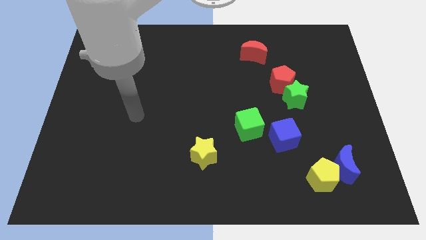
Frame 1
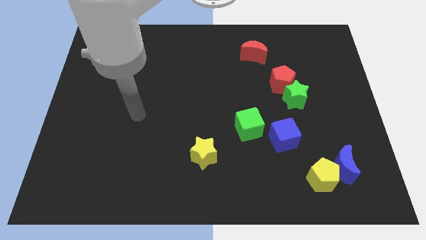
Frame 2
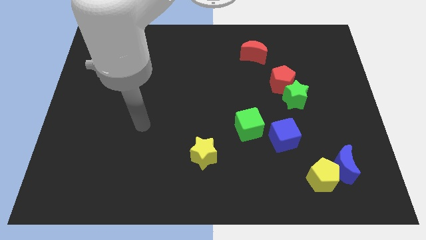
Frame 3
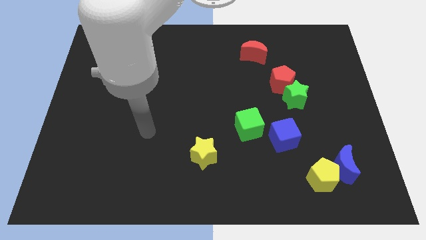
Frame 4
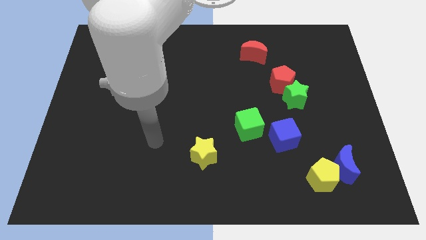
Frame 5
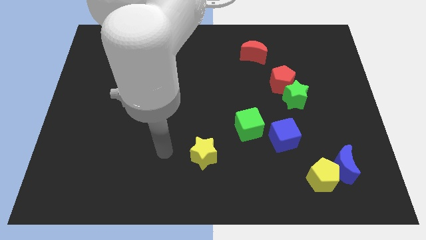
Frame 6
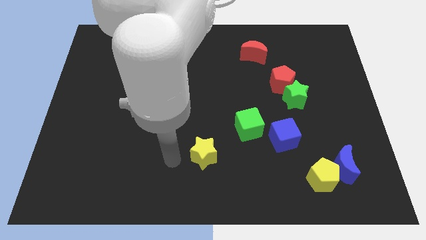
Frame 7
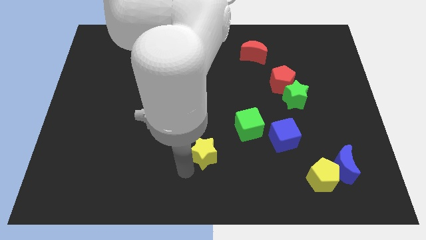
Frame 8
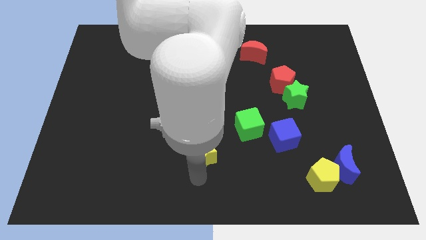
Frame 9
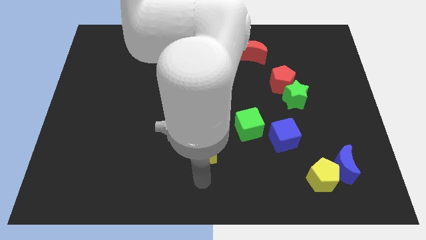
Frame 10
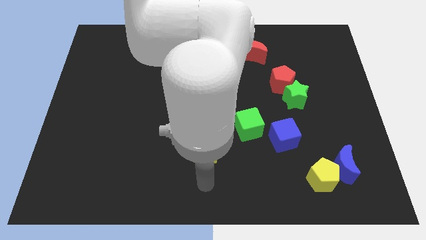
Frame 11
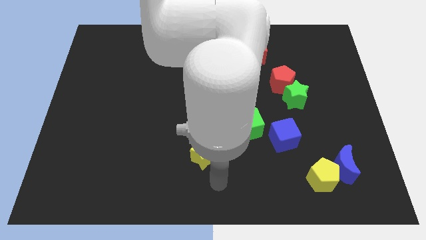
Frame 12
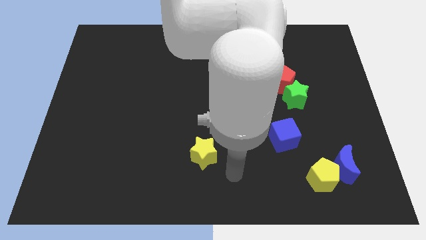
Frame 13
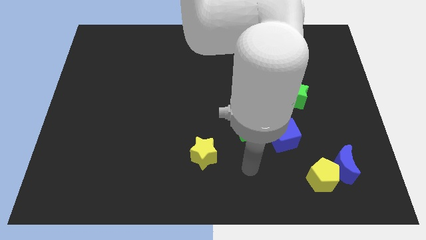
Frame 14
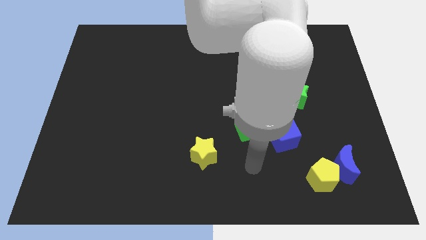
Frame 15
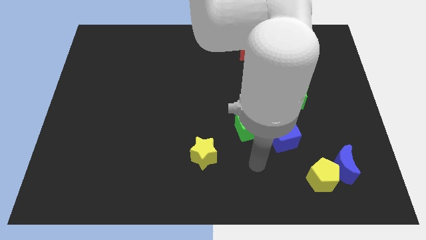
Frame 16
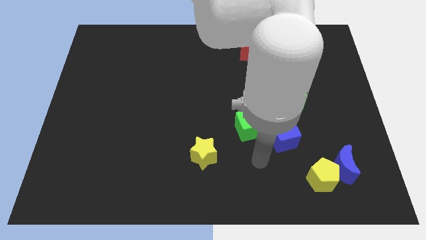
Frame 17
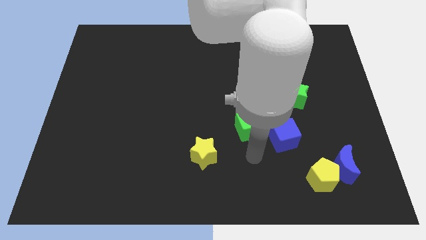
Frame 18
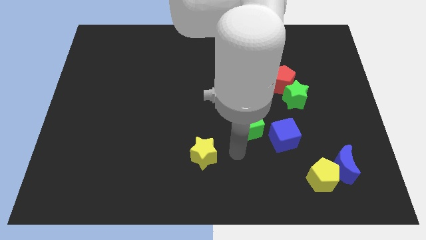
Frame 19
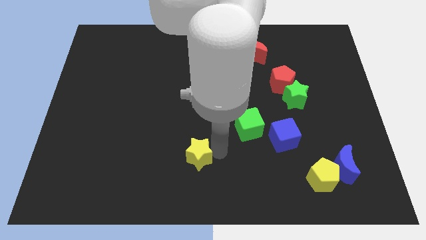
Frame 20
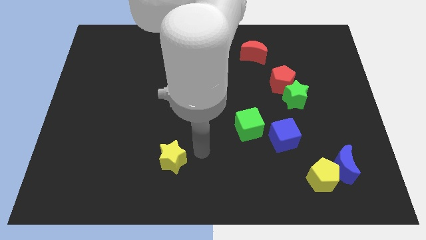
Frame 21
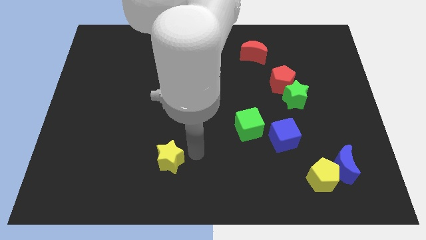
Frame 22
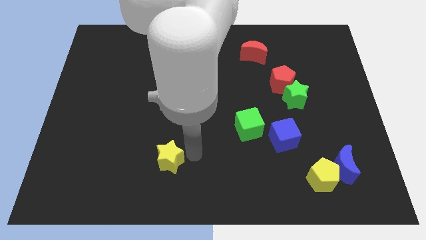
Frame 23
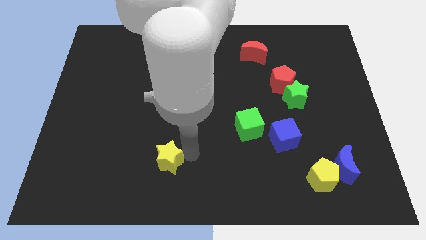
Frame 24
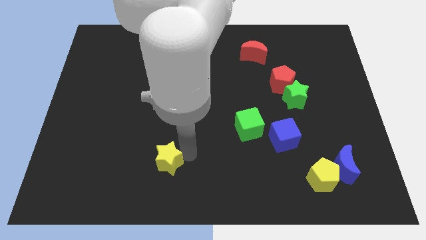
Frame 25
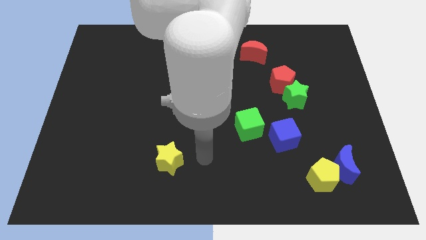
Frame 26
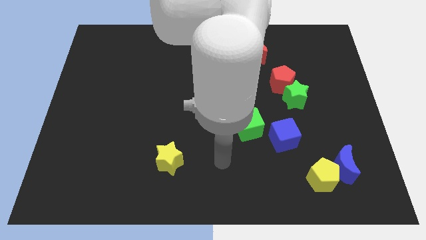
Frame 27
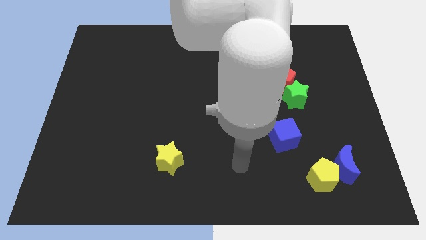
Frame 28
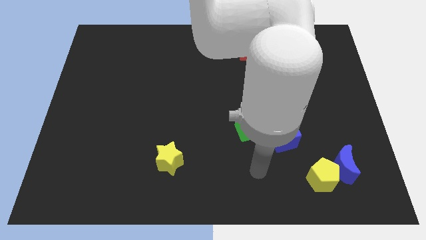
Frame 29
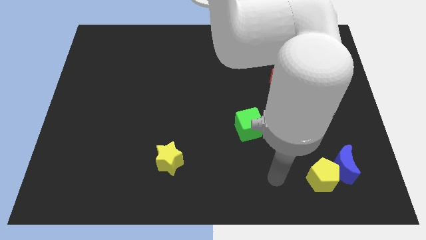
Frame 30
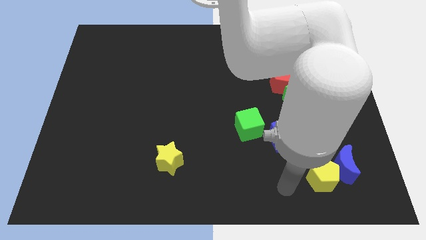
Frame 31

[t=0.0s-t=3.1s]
push the yellow star to the left side of the board

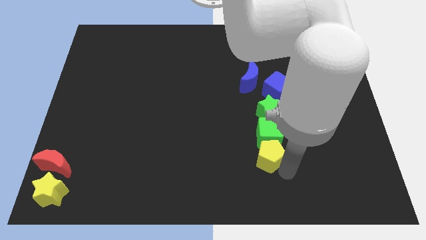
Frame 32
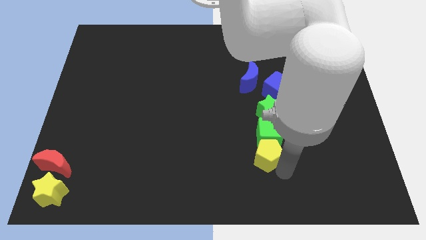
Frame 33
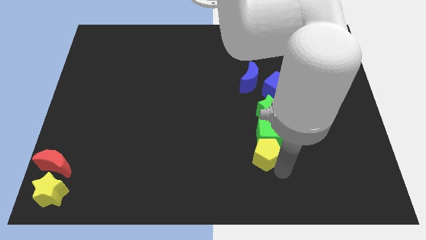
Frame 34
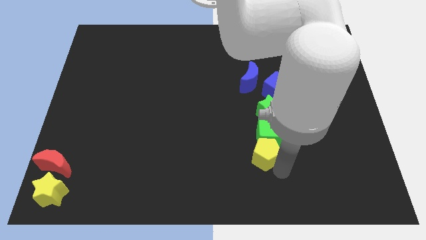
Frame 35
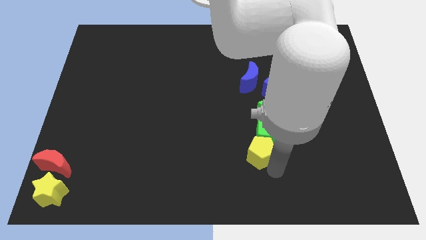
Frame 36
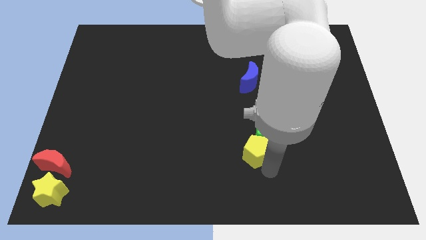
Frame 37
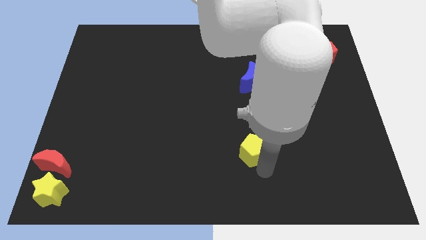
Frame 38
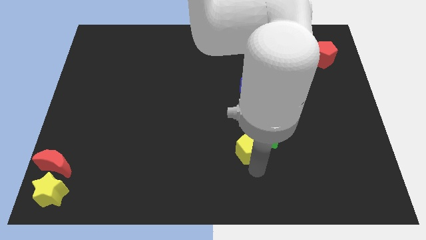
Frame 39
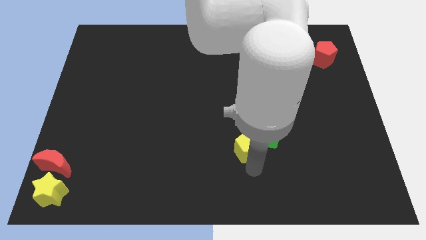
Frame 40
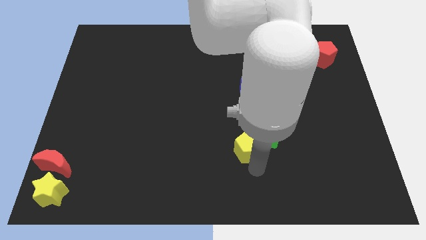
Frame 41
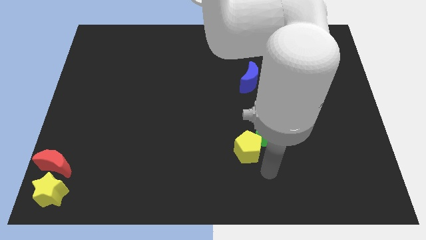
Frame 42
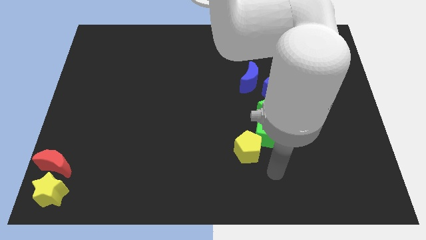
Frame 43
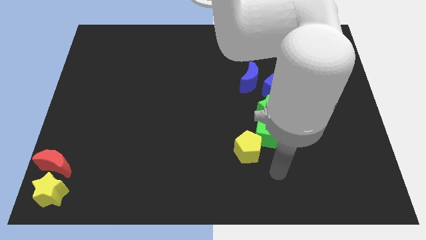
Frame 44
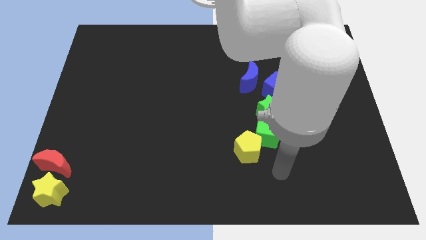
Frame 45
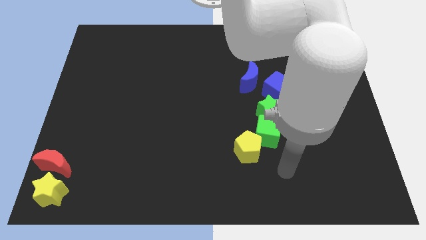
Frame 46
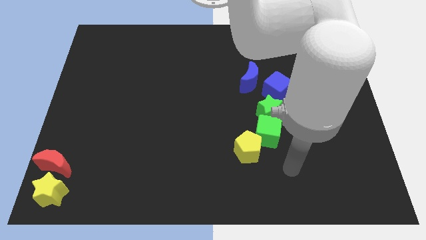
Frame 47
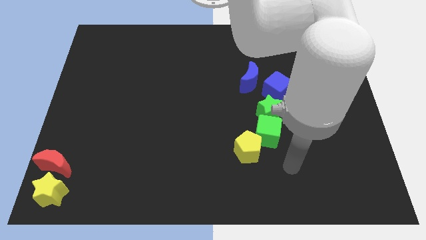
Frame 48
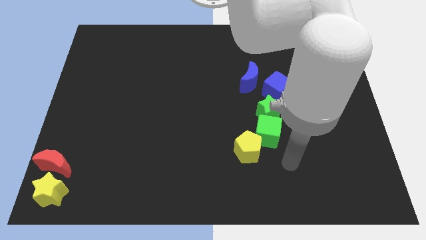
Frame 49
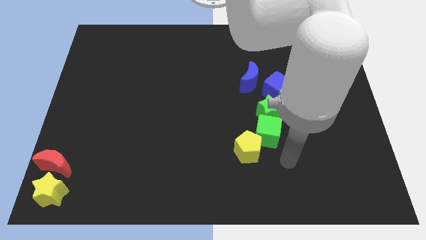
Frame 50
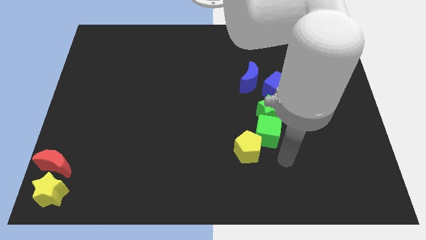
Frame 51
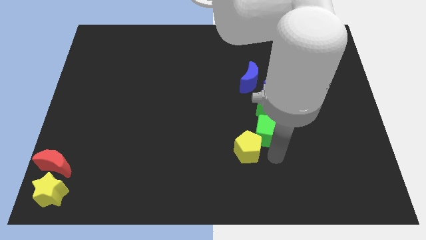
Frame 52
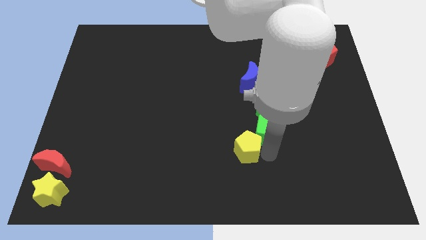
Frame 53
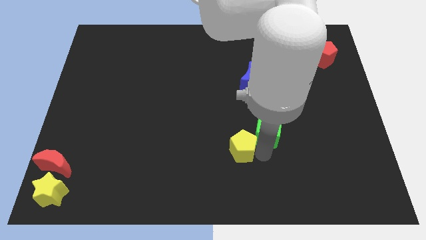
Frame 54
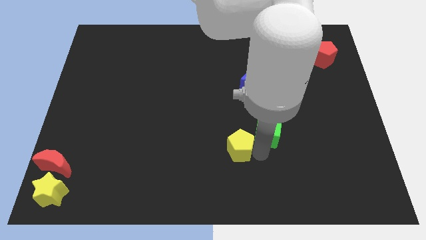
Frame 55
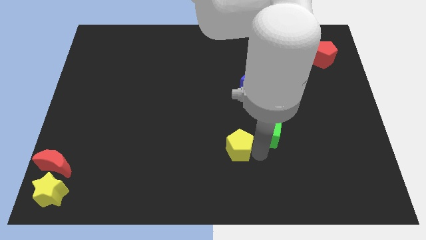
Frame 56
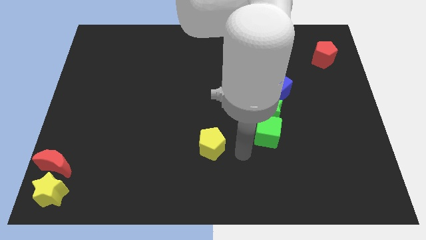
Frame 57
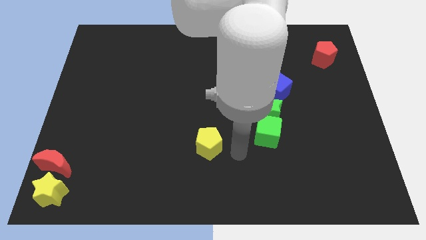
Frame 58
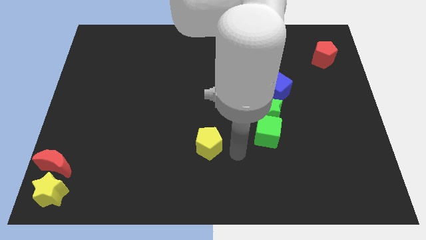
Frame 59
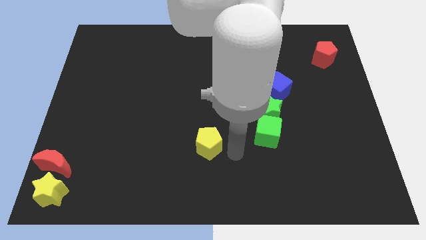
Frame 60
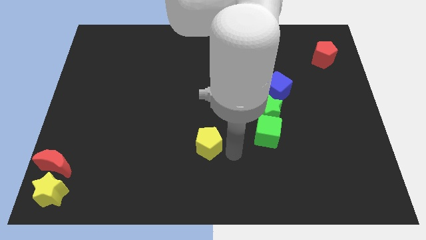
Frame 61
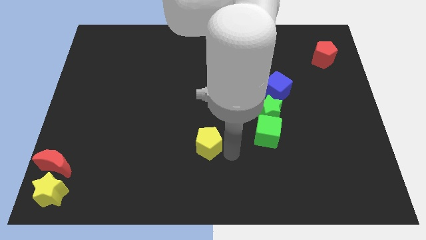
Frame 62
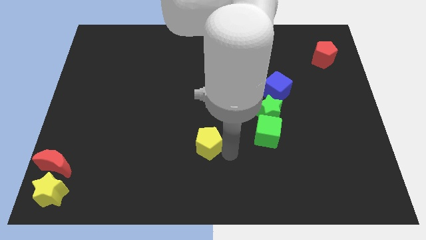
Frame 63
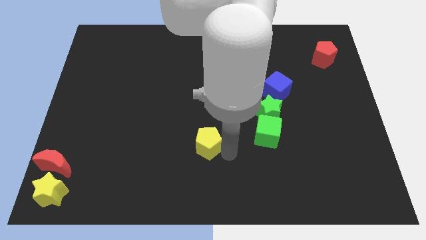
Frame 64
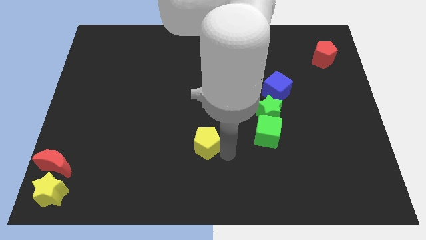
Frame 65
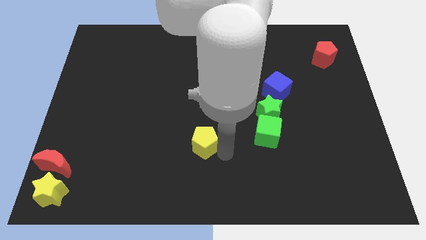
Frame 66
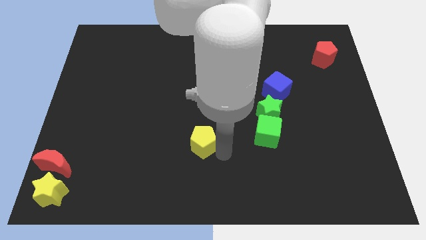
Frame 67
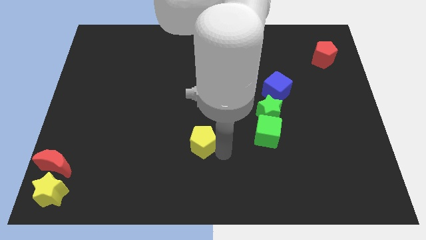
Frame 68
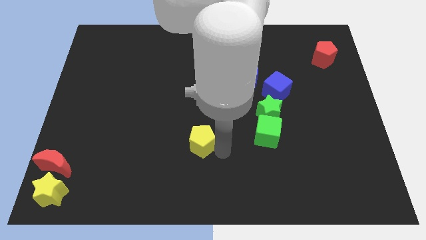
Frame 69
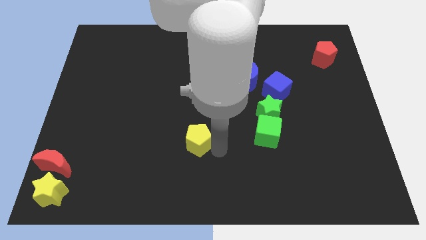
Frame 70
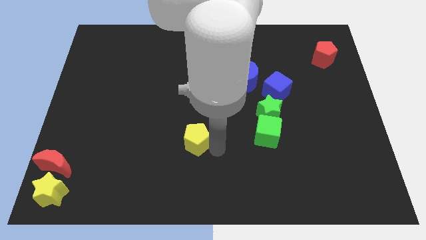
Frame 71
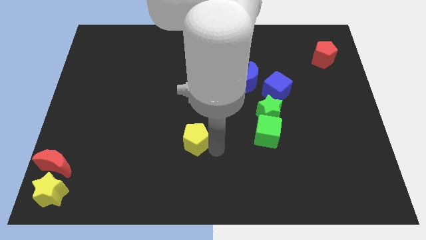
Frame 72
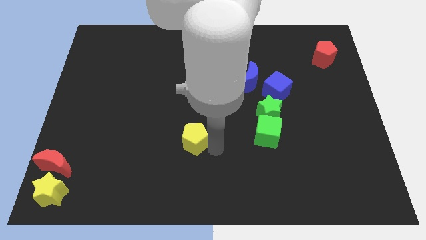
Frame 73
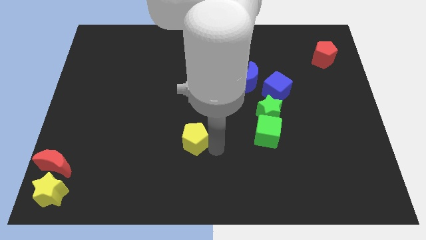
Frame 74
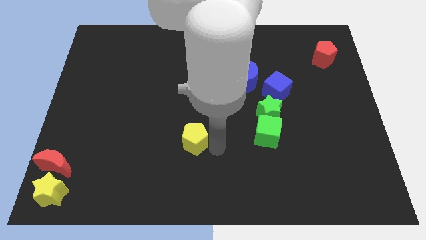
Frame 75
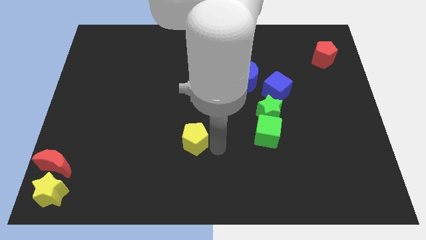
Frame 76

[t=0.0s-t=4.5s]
separate yellow pentagon from green cube

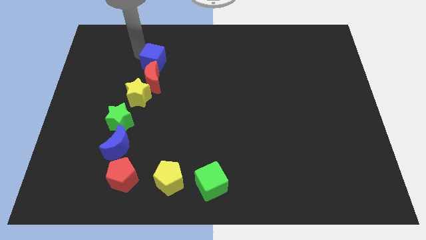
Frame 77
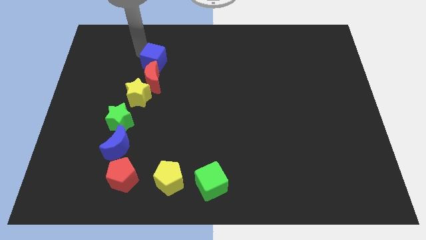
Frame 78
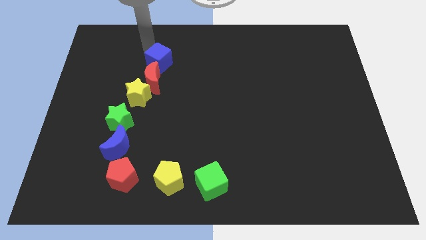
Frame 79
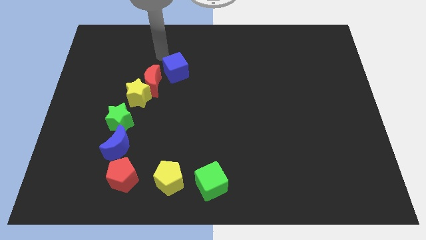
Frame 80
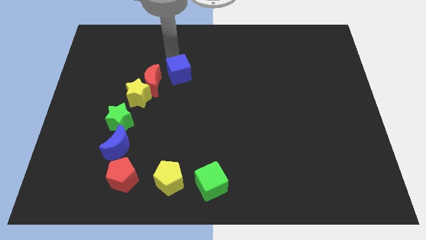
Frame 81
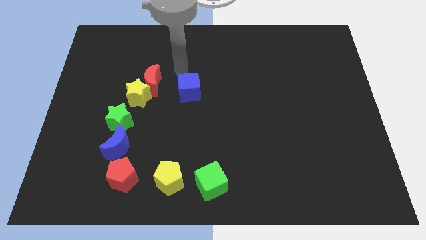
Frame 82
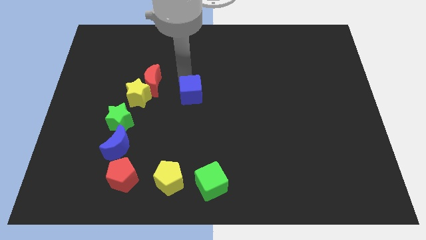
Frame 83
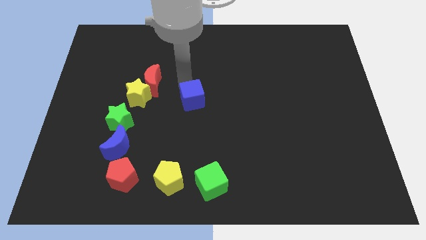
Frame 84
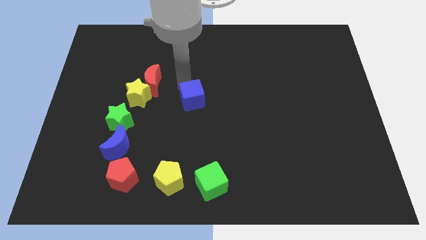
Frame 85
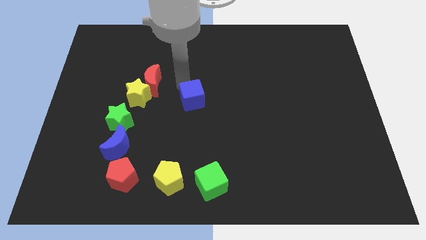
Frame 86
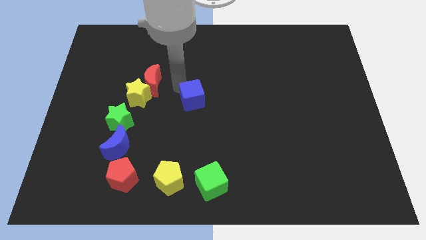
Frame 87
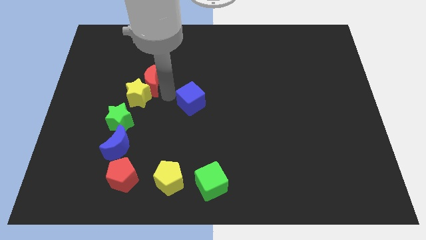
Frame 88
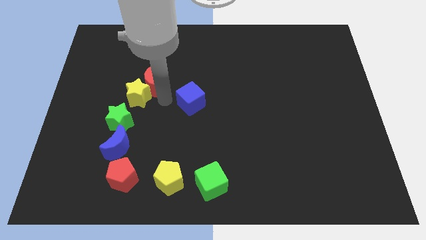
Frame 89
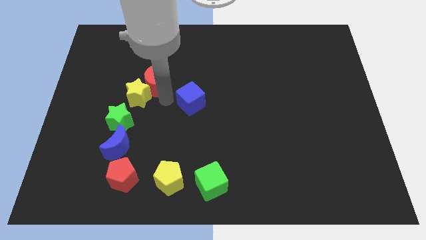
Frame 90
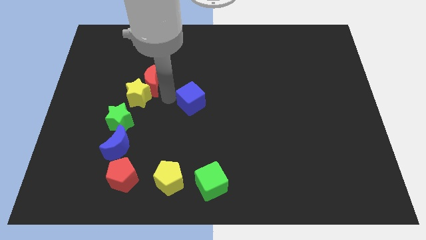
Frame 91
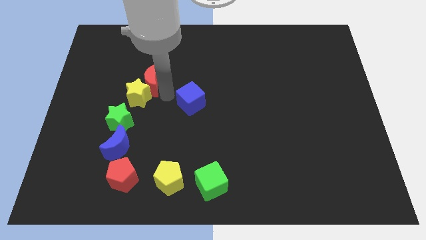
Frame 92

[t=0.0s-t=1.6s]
separate blue cube from the red moon
